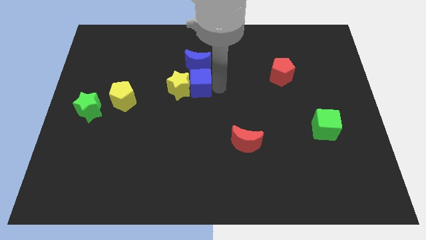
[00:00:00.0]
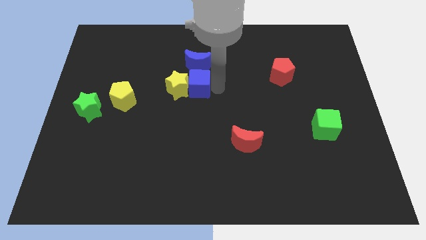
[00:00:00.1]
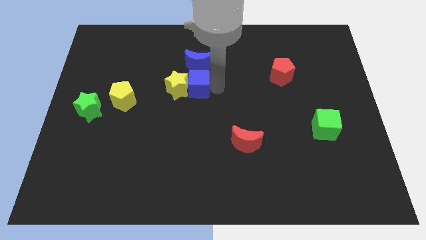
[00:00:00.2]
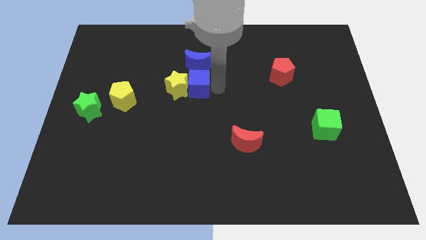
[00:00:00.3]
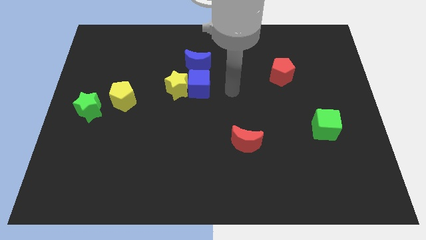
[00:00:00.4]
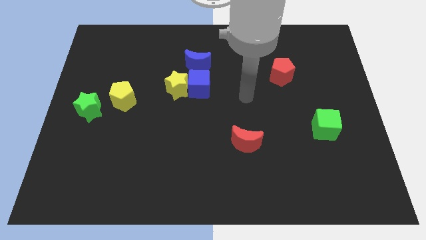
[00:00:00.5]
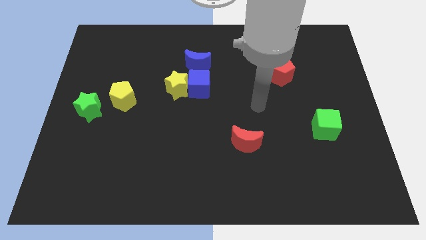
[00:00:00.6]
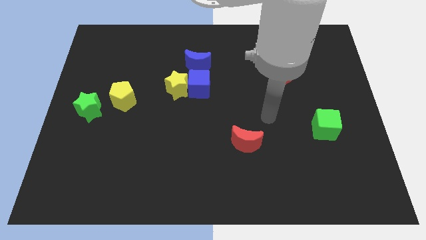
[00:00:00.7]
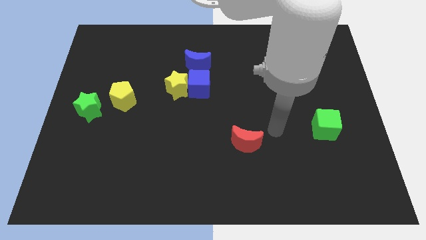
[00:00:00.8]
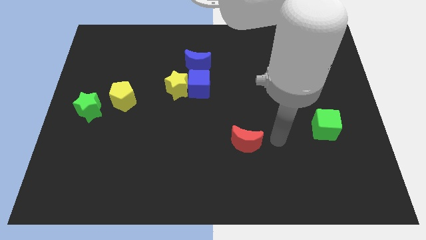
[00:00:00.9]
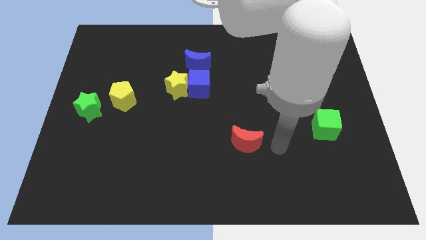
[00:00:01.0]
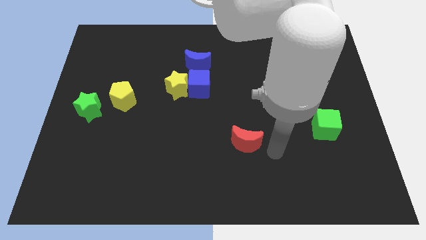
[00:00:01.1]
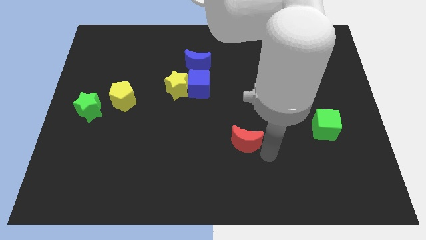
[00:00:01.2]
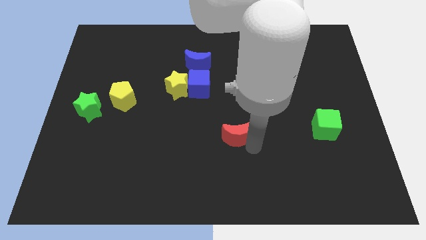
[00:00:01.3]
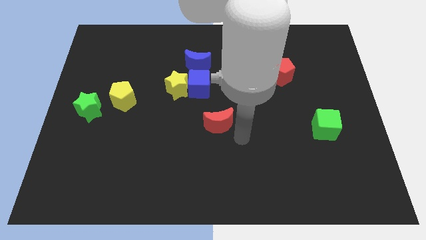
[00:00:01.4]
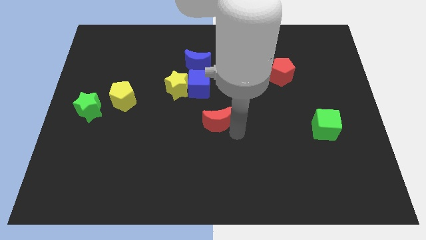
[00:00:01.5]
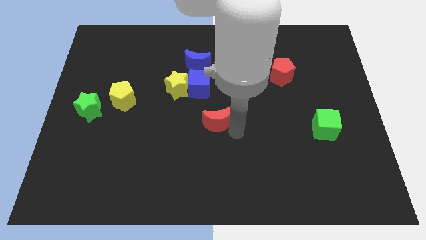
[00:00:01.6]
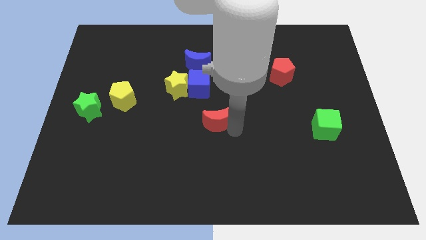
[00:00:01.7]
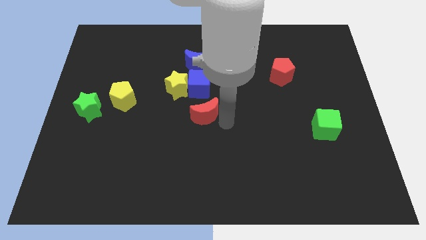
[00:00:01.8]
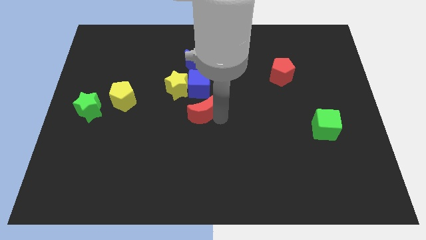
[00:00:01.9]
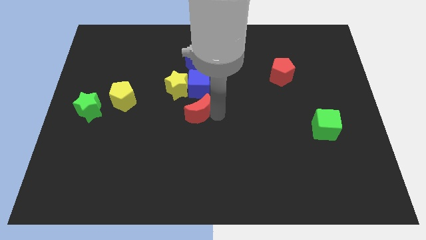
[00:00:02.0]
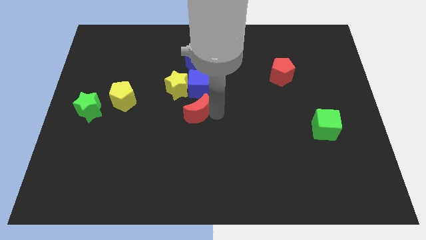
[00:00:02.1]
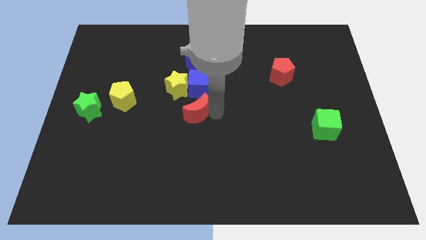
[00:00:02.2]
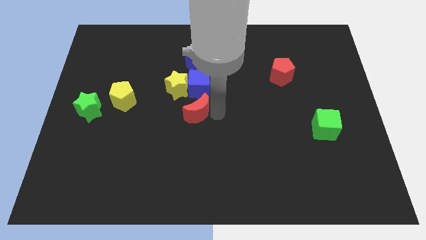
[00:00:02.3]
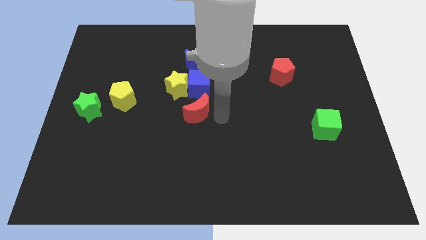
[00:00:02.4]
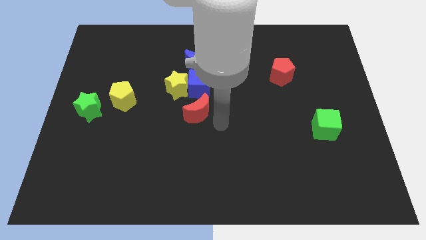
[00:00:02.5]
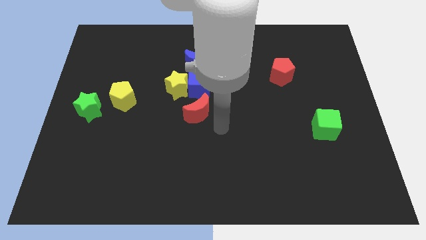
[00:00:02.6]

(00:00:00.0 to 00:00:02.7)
place the red crescent below the blue cube

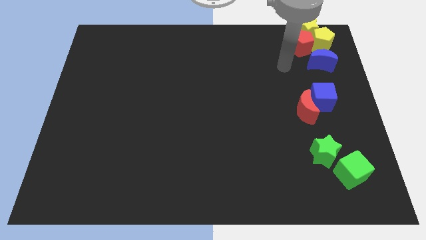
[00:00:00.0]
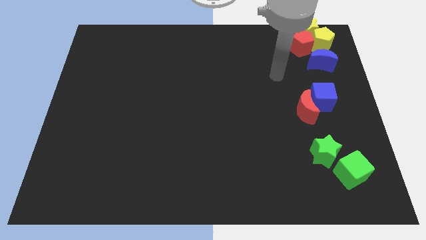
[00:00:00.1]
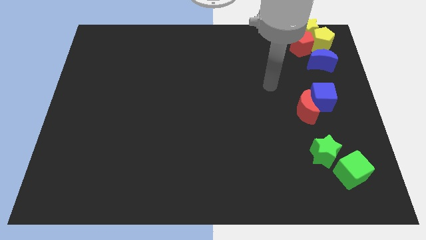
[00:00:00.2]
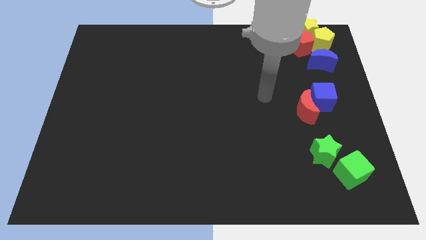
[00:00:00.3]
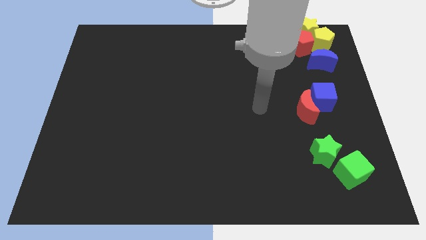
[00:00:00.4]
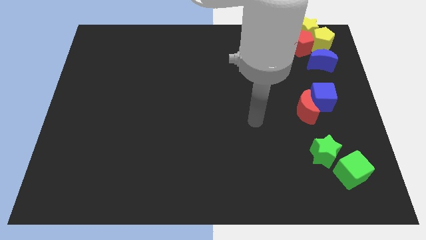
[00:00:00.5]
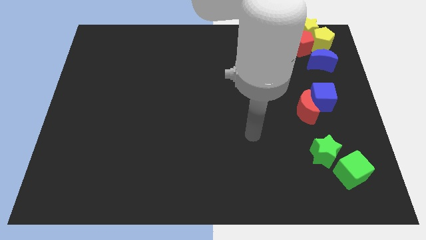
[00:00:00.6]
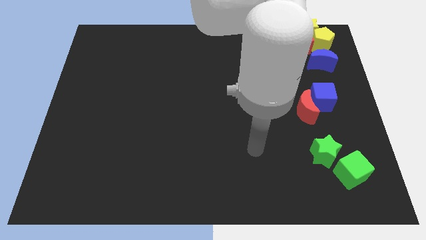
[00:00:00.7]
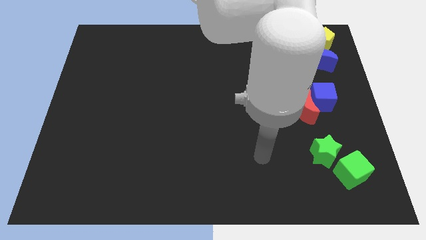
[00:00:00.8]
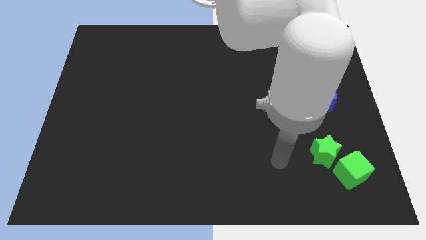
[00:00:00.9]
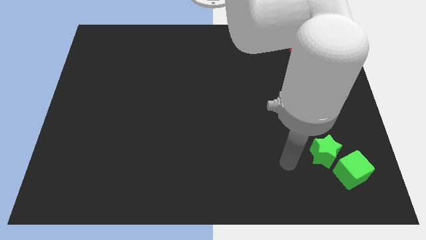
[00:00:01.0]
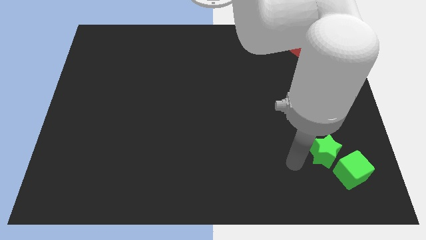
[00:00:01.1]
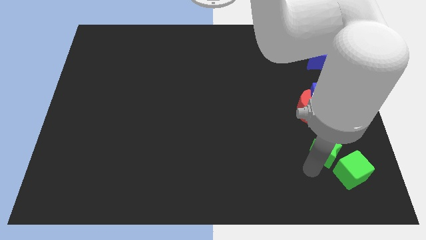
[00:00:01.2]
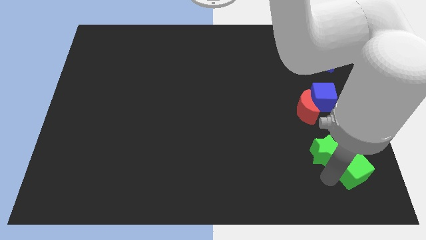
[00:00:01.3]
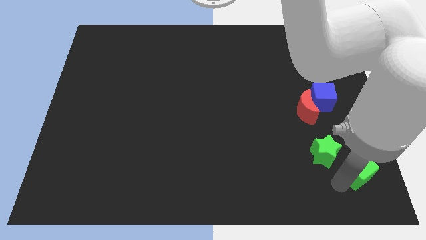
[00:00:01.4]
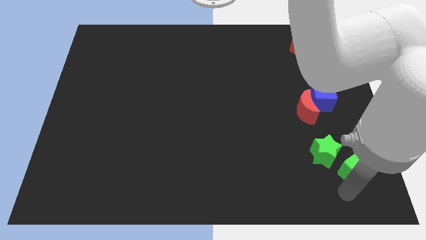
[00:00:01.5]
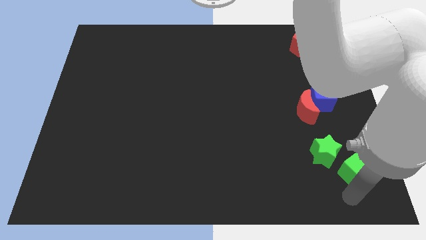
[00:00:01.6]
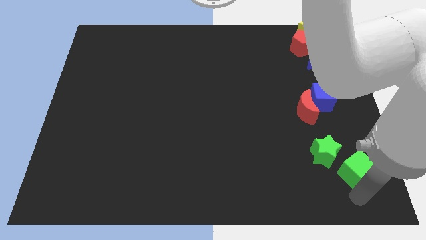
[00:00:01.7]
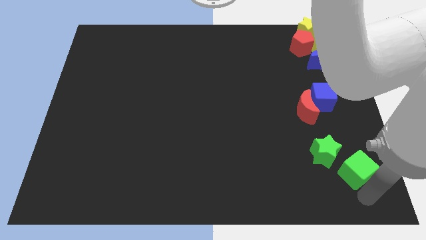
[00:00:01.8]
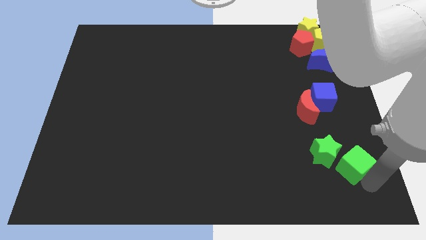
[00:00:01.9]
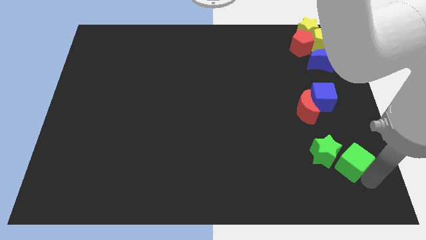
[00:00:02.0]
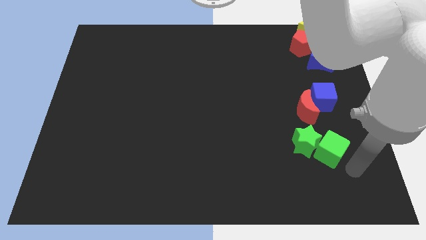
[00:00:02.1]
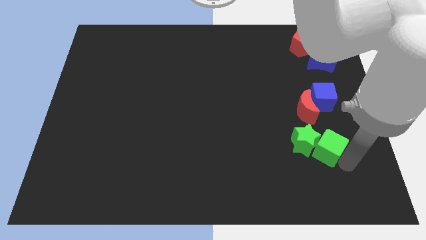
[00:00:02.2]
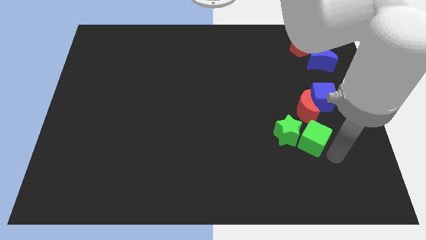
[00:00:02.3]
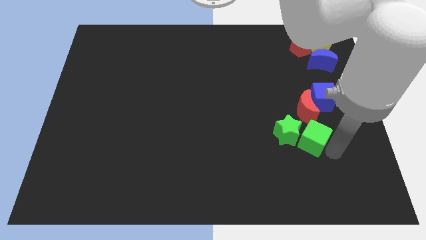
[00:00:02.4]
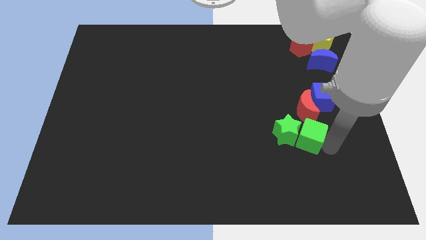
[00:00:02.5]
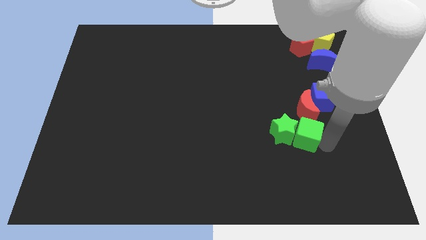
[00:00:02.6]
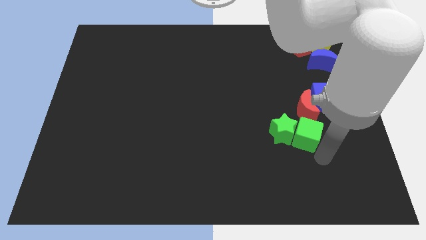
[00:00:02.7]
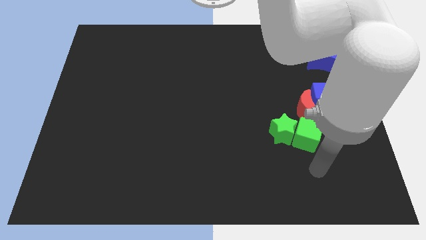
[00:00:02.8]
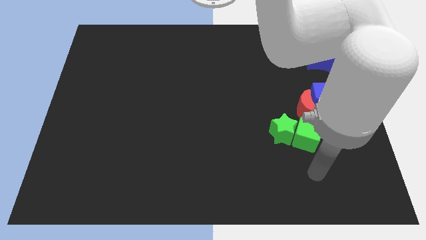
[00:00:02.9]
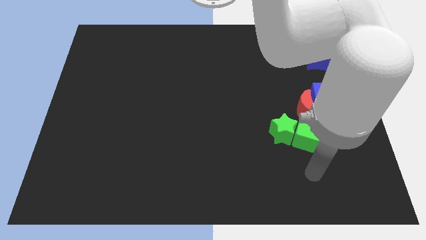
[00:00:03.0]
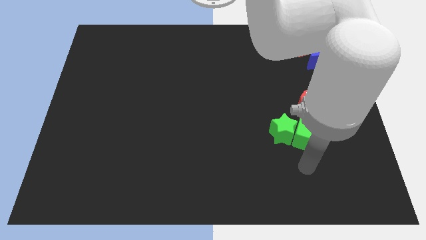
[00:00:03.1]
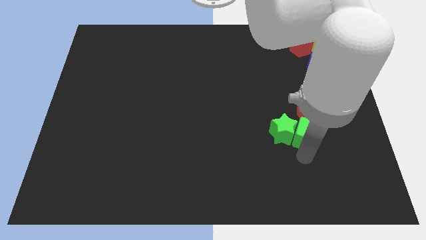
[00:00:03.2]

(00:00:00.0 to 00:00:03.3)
move the green cube to the right of the green star

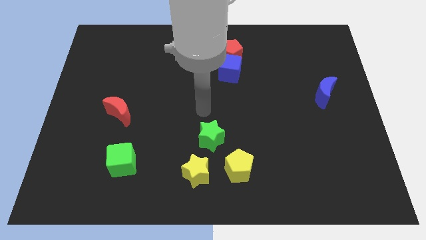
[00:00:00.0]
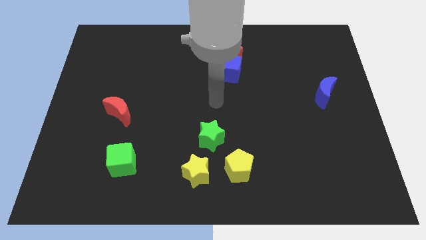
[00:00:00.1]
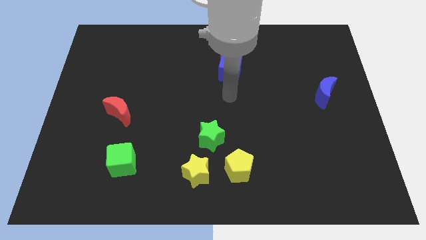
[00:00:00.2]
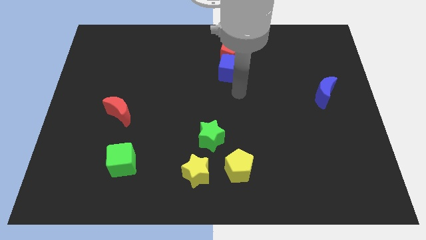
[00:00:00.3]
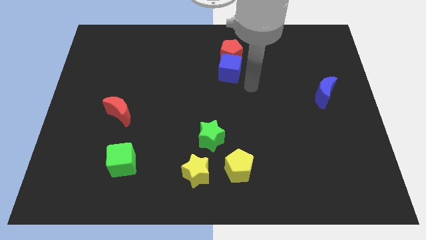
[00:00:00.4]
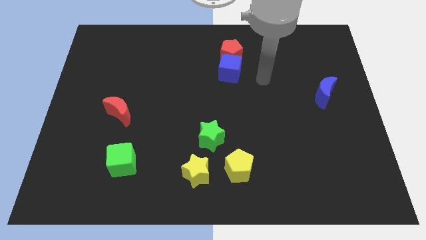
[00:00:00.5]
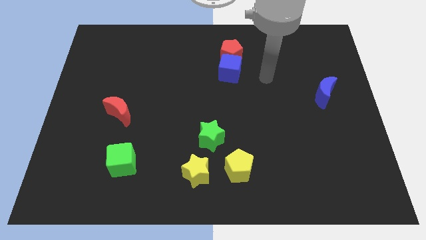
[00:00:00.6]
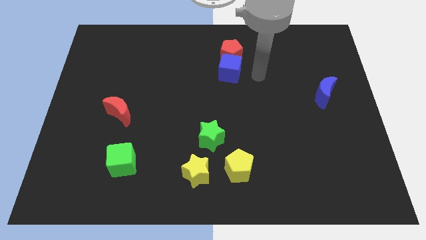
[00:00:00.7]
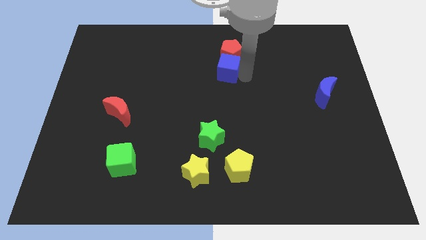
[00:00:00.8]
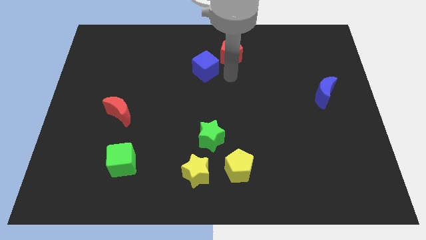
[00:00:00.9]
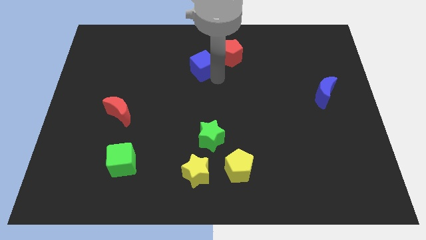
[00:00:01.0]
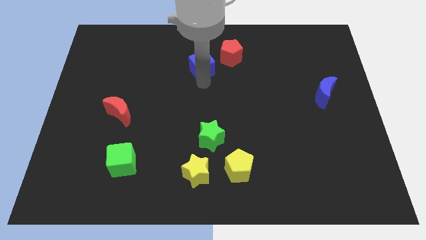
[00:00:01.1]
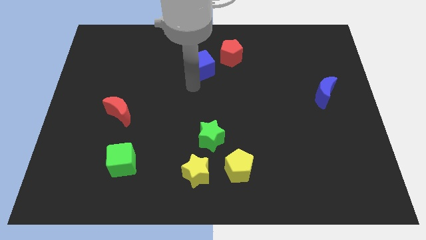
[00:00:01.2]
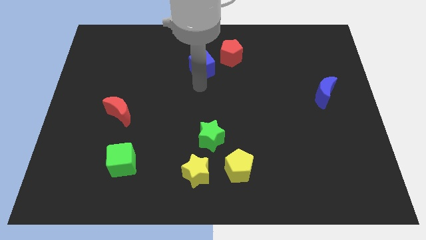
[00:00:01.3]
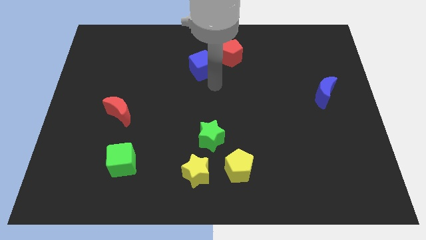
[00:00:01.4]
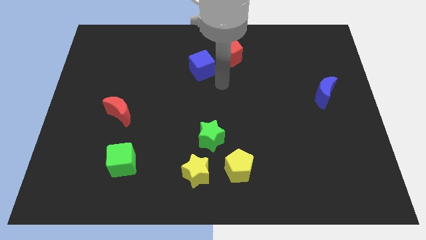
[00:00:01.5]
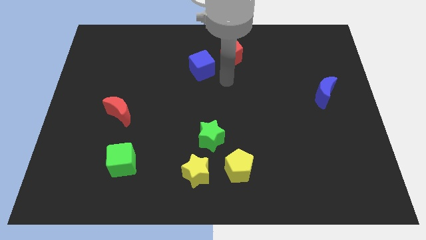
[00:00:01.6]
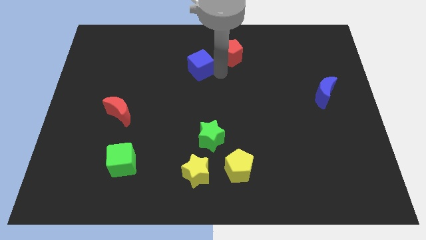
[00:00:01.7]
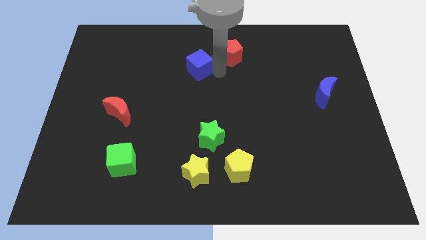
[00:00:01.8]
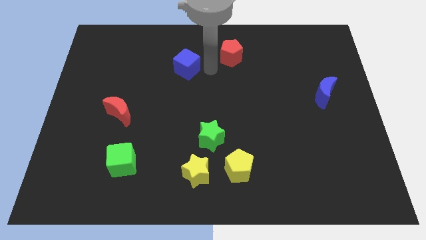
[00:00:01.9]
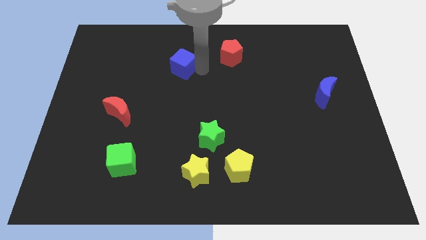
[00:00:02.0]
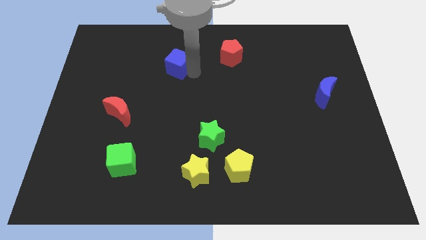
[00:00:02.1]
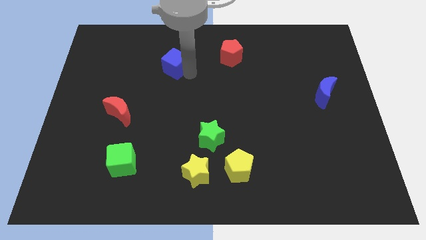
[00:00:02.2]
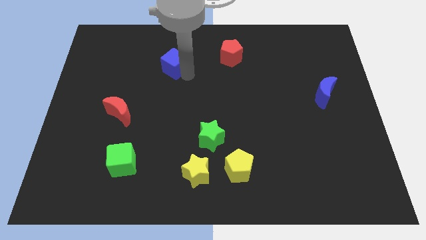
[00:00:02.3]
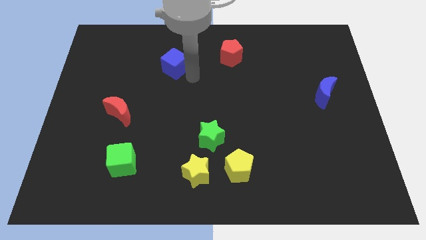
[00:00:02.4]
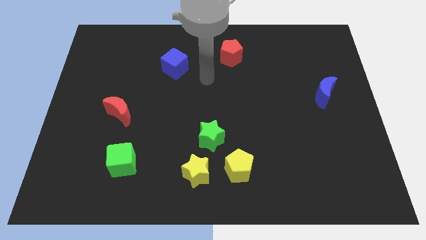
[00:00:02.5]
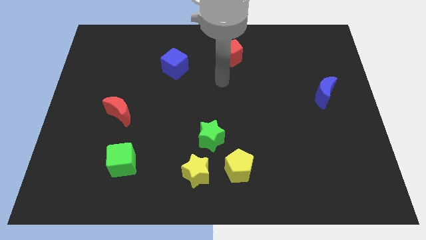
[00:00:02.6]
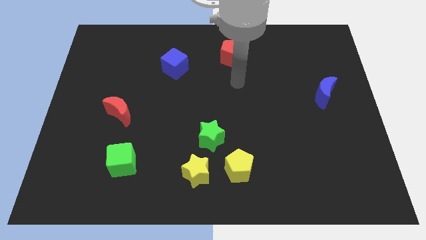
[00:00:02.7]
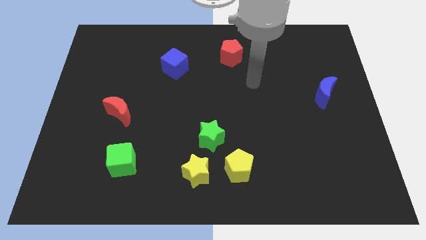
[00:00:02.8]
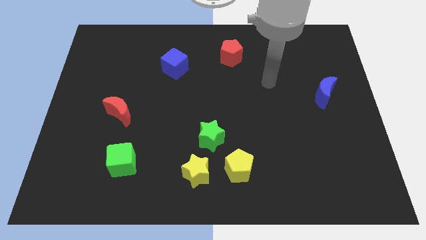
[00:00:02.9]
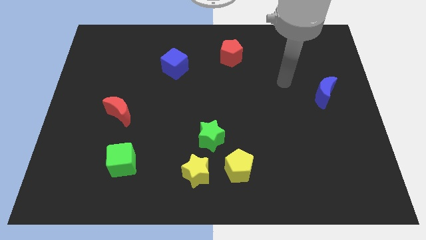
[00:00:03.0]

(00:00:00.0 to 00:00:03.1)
separate the blue cube and red pentagon
